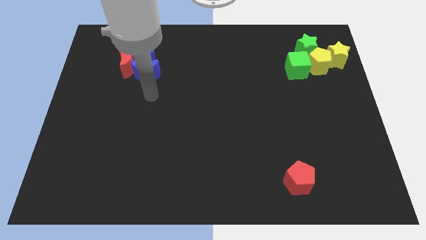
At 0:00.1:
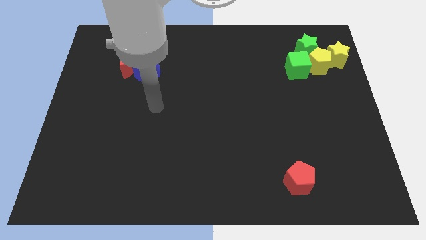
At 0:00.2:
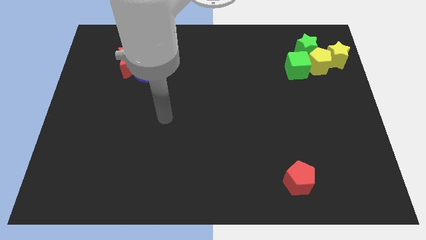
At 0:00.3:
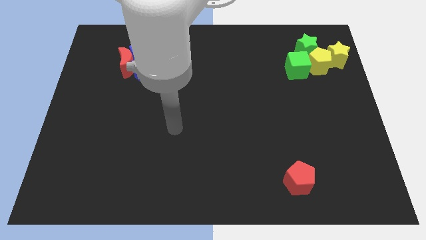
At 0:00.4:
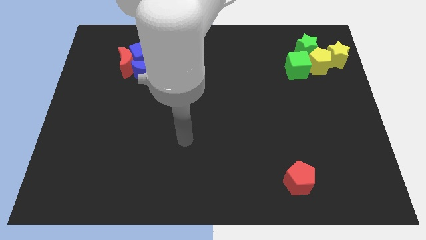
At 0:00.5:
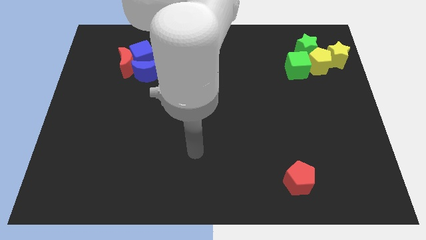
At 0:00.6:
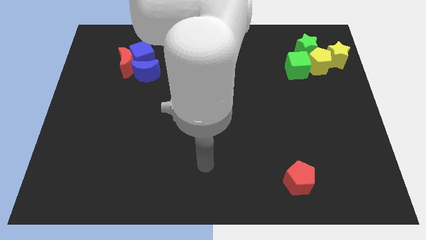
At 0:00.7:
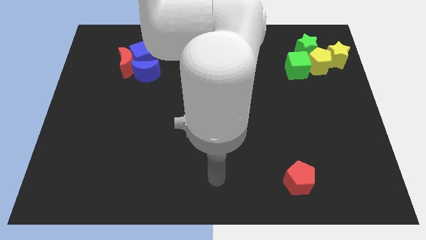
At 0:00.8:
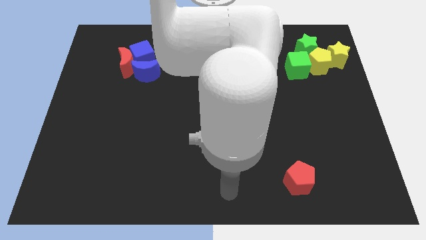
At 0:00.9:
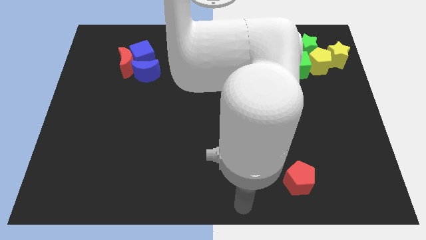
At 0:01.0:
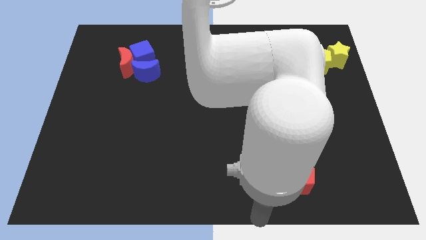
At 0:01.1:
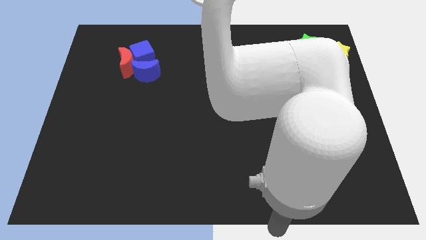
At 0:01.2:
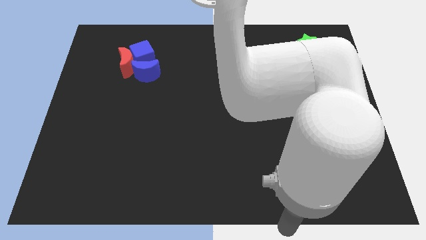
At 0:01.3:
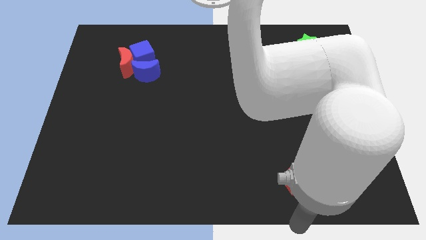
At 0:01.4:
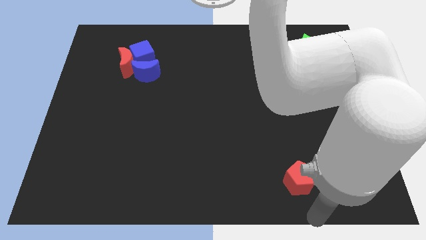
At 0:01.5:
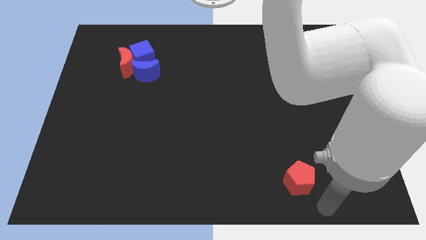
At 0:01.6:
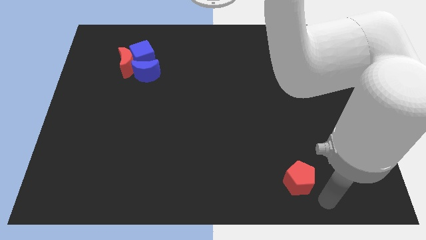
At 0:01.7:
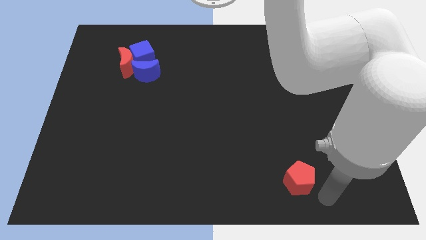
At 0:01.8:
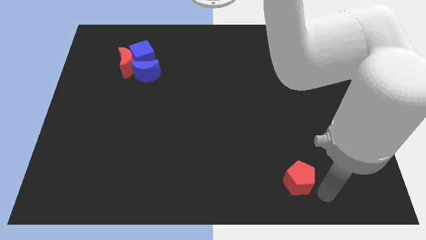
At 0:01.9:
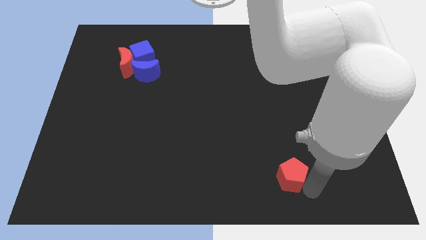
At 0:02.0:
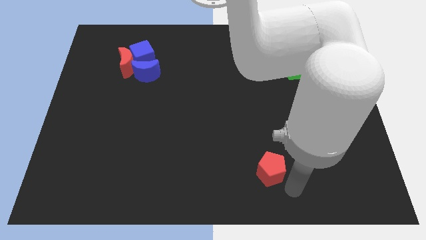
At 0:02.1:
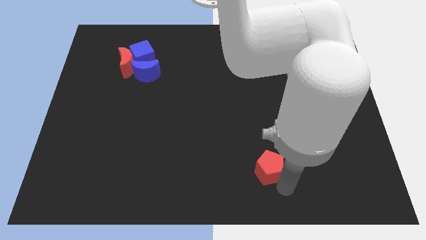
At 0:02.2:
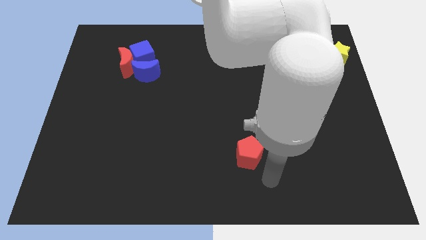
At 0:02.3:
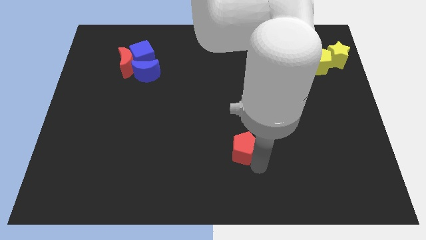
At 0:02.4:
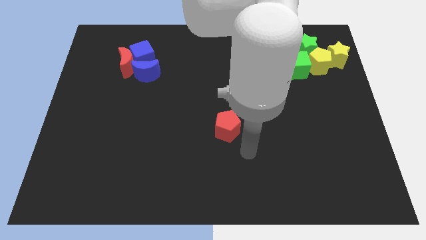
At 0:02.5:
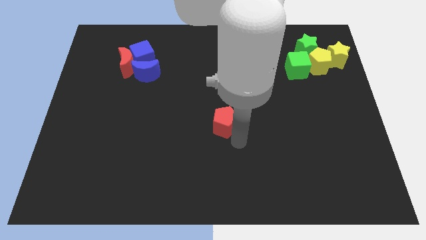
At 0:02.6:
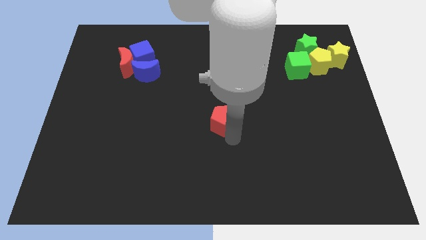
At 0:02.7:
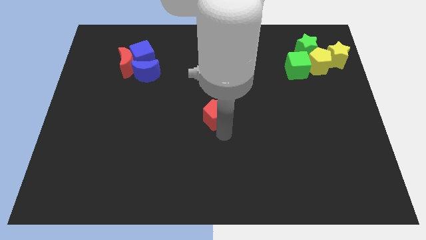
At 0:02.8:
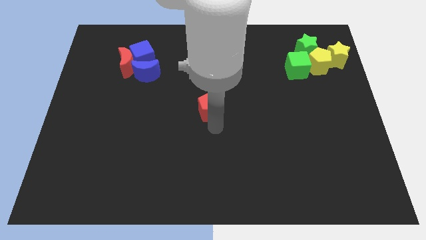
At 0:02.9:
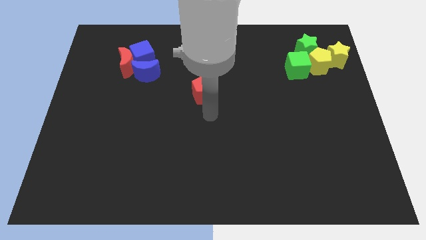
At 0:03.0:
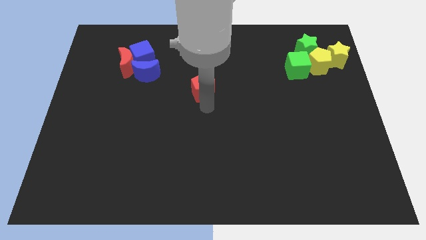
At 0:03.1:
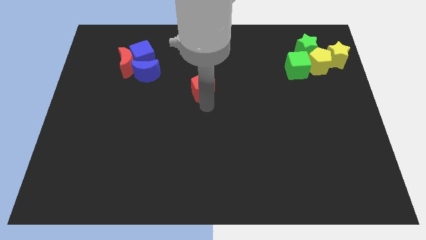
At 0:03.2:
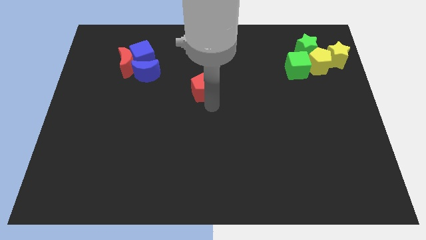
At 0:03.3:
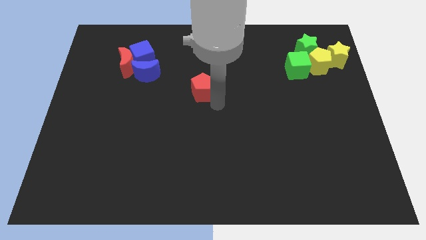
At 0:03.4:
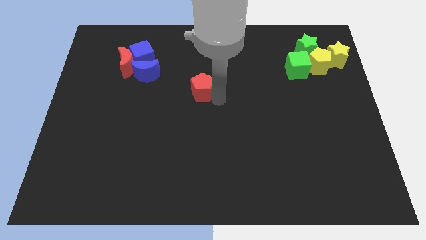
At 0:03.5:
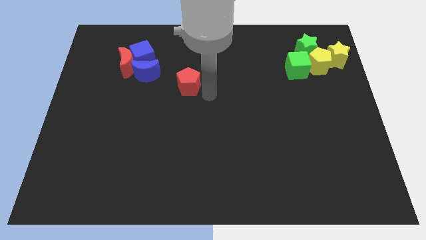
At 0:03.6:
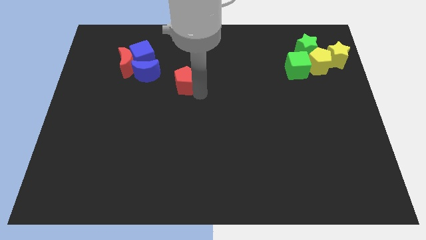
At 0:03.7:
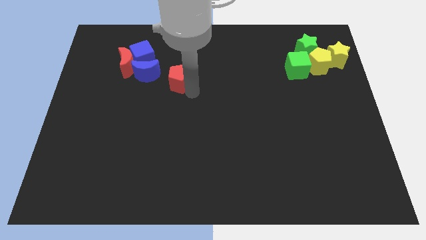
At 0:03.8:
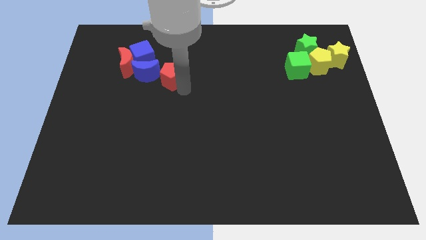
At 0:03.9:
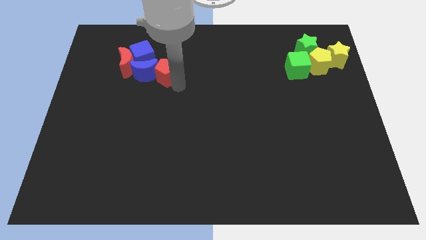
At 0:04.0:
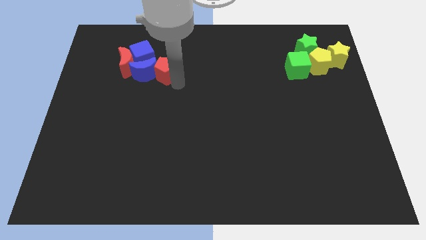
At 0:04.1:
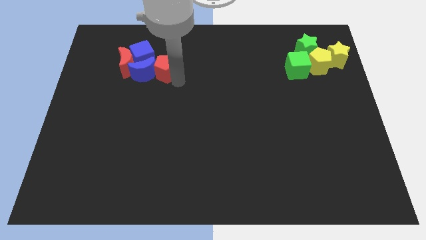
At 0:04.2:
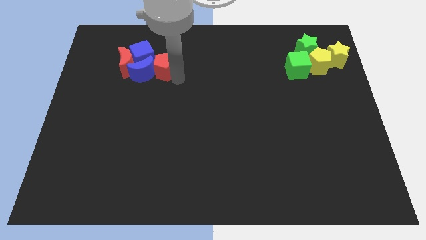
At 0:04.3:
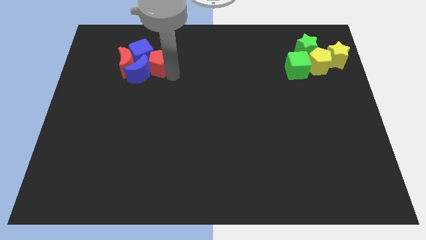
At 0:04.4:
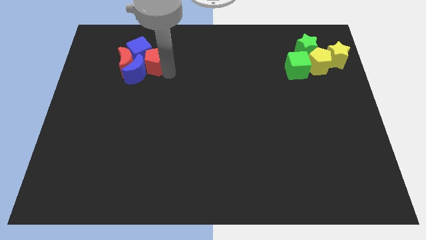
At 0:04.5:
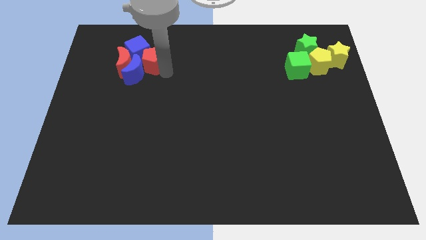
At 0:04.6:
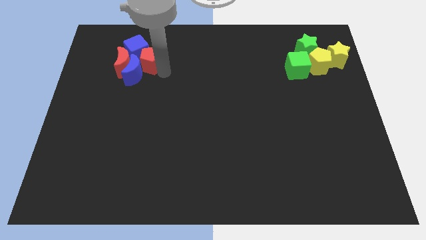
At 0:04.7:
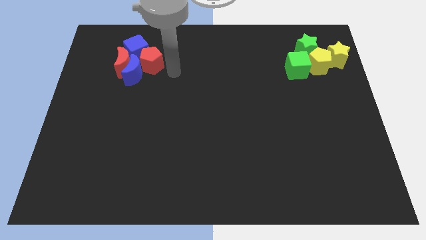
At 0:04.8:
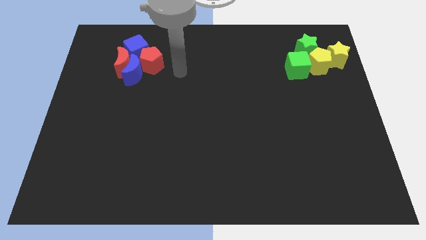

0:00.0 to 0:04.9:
push the red pentagon towards the blue blocks and red moon

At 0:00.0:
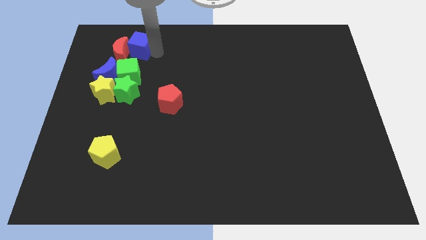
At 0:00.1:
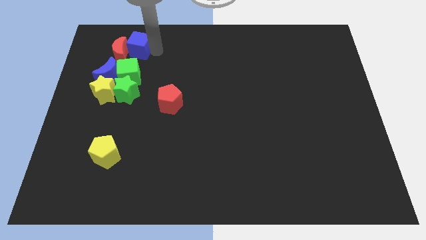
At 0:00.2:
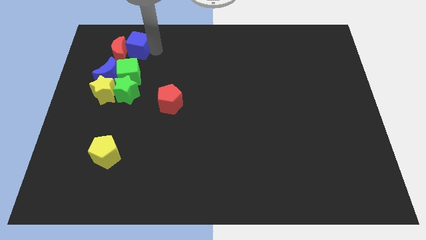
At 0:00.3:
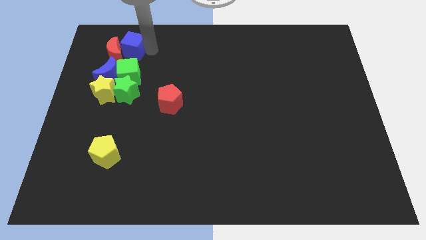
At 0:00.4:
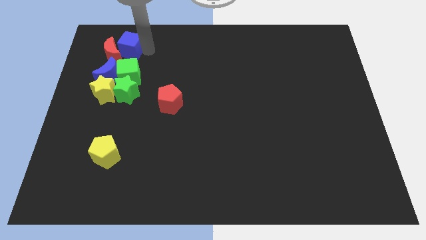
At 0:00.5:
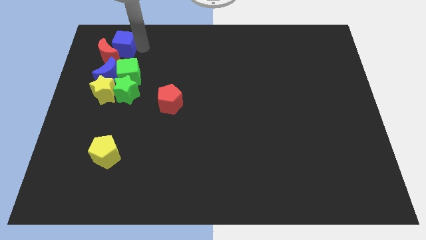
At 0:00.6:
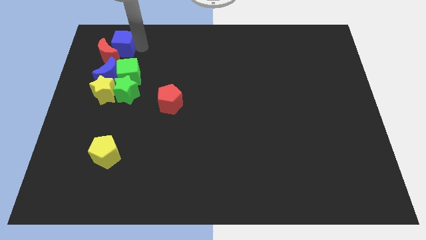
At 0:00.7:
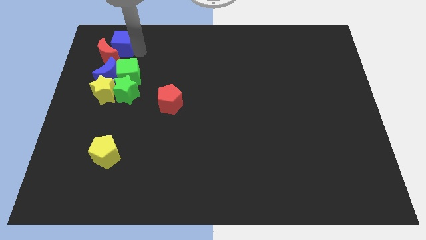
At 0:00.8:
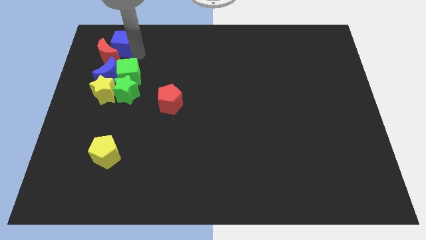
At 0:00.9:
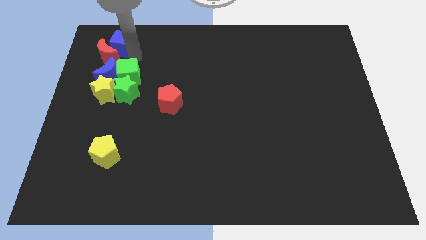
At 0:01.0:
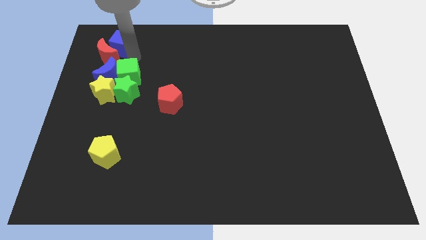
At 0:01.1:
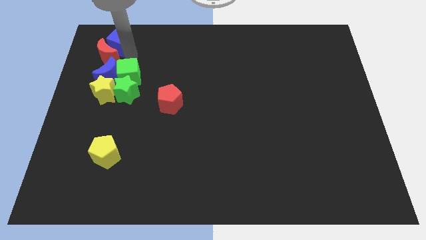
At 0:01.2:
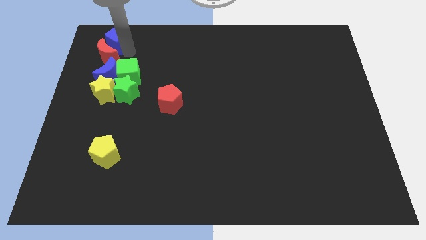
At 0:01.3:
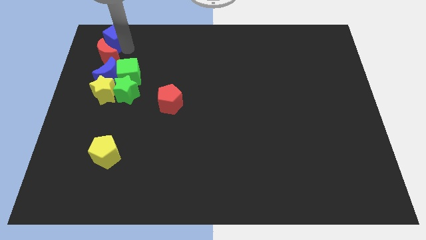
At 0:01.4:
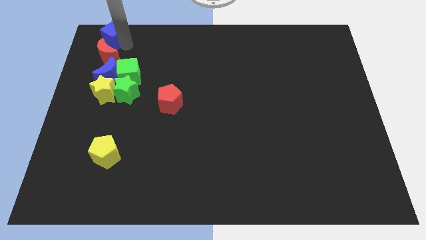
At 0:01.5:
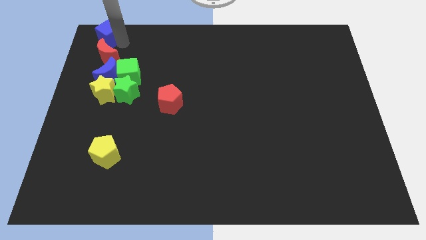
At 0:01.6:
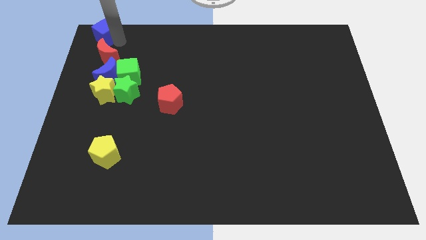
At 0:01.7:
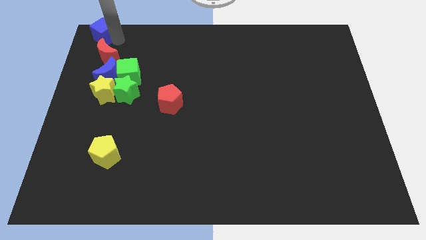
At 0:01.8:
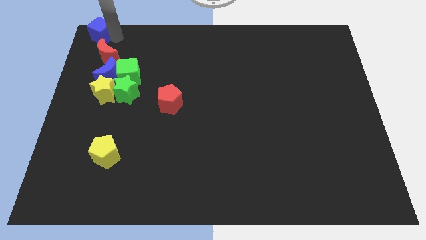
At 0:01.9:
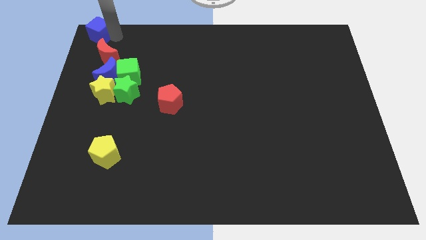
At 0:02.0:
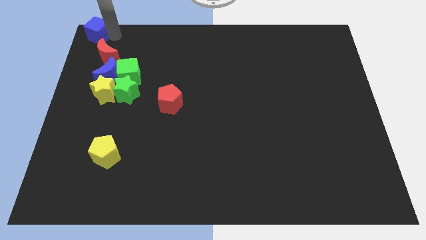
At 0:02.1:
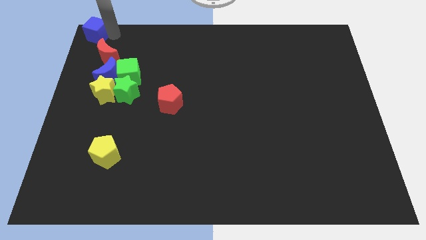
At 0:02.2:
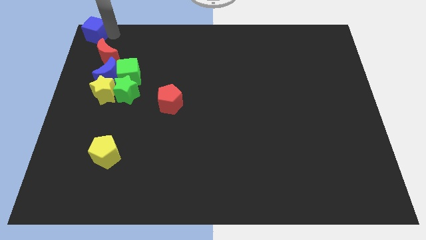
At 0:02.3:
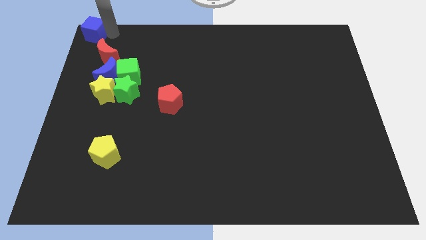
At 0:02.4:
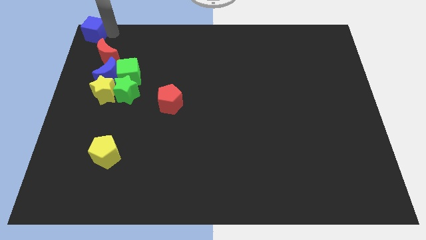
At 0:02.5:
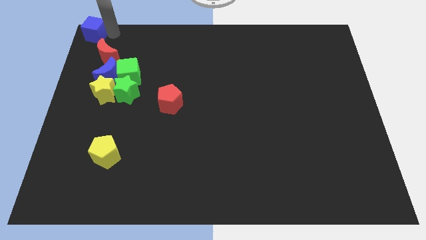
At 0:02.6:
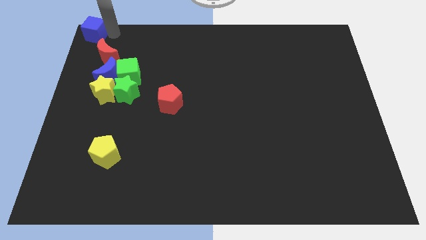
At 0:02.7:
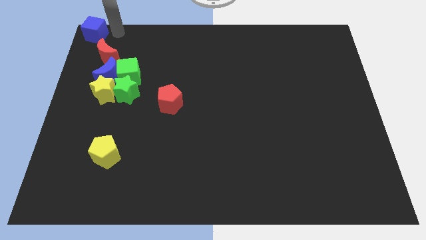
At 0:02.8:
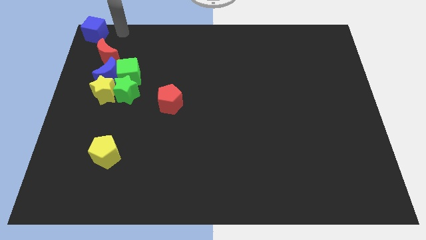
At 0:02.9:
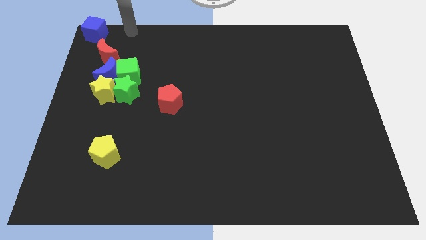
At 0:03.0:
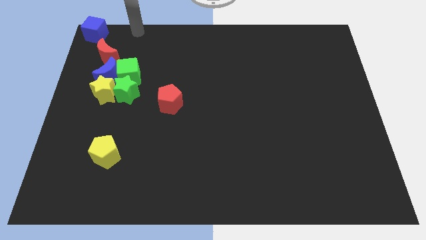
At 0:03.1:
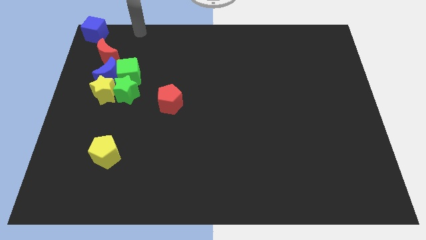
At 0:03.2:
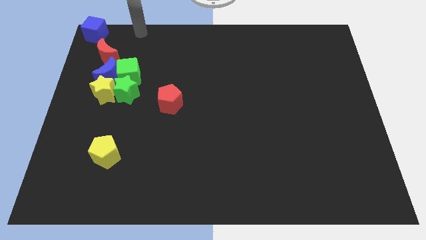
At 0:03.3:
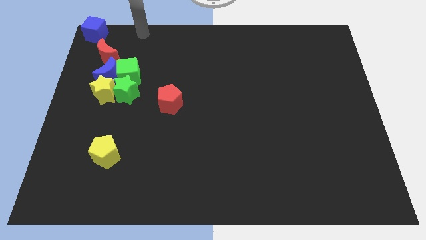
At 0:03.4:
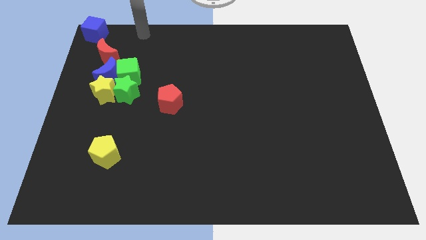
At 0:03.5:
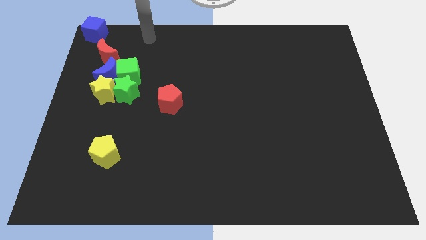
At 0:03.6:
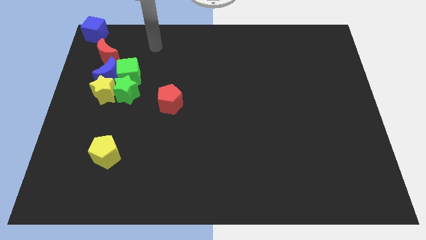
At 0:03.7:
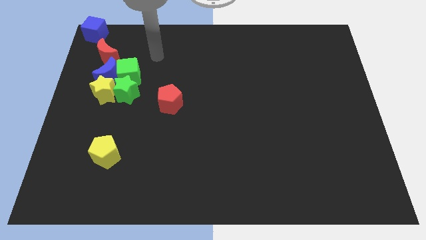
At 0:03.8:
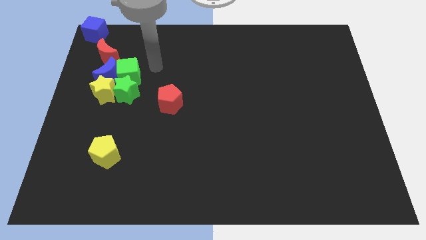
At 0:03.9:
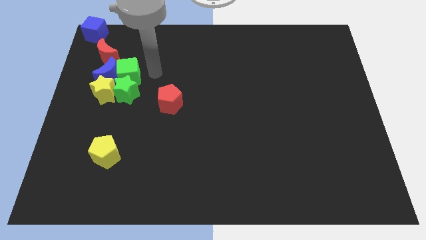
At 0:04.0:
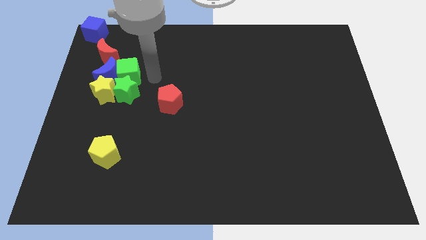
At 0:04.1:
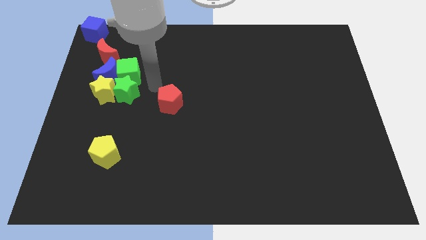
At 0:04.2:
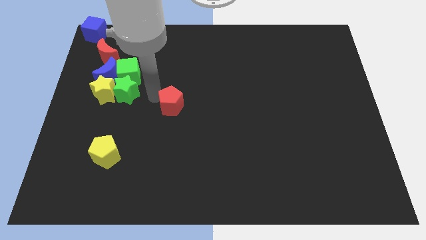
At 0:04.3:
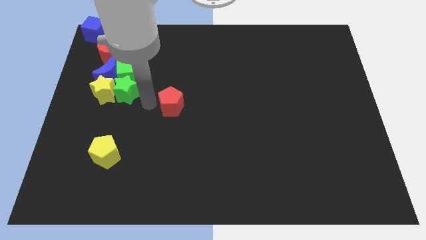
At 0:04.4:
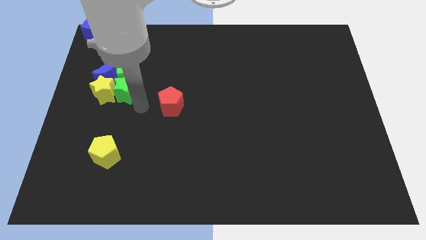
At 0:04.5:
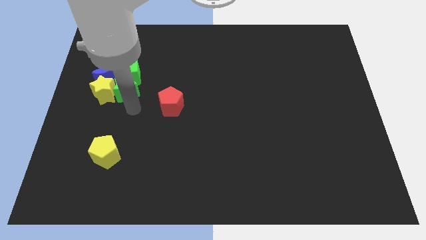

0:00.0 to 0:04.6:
place the blue cube at the top left corner of the board
